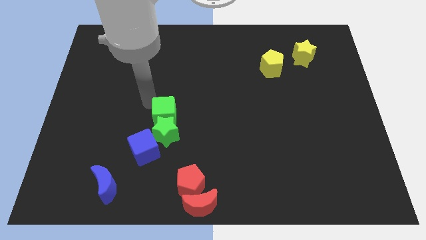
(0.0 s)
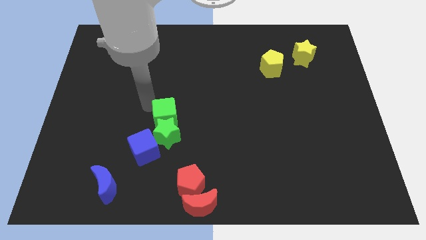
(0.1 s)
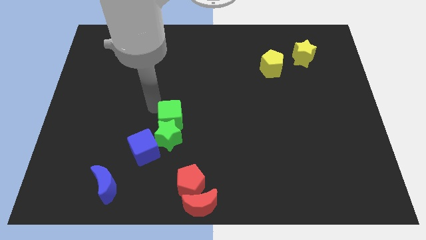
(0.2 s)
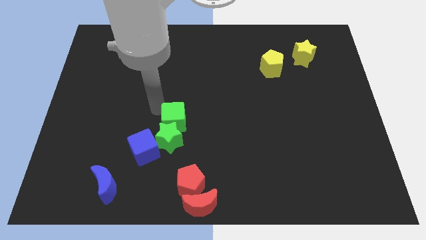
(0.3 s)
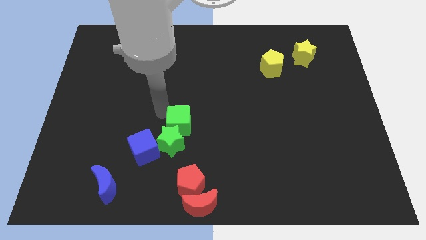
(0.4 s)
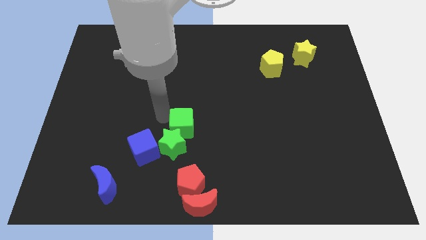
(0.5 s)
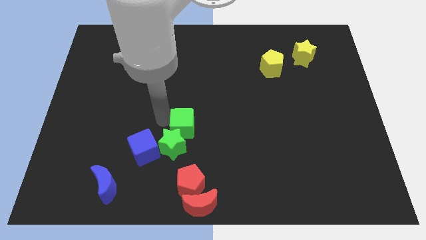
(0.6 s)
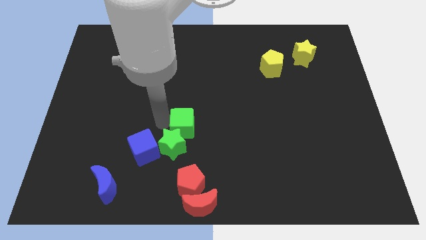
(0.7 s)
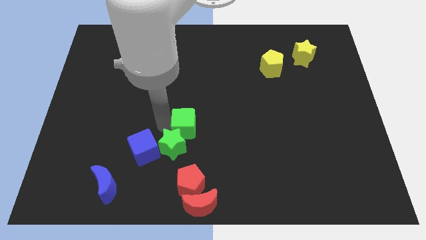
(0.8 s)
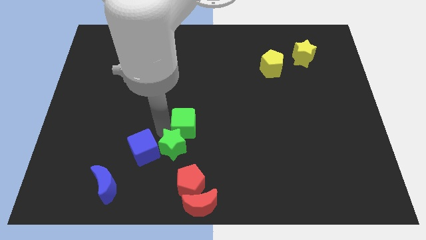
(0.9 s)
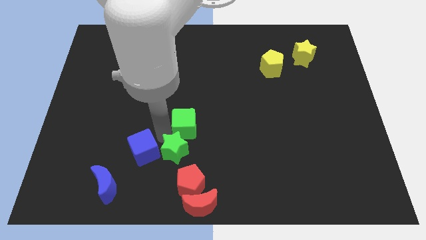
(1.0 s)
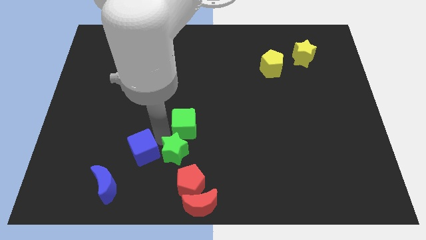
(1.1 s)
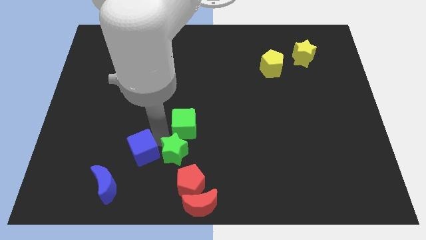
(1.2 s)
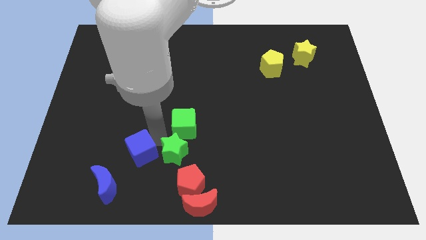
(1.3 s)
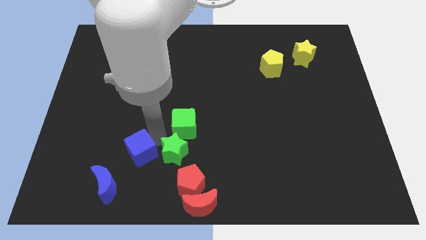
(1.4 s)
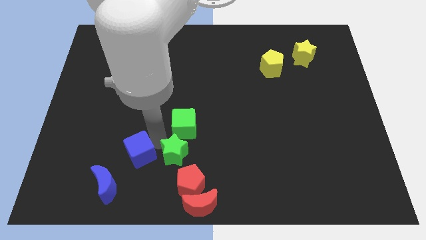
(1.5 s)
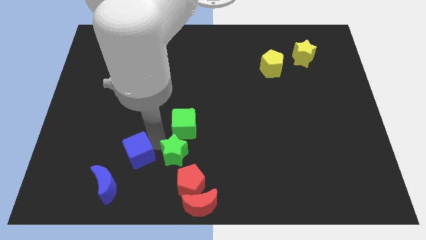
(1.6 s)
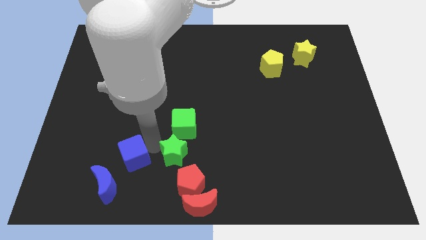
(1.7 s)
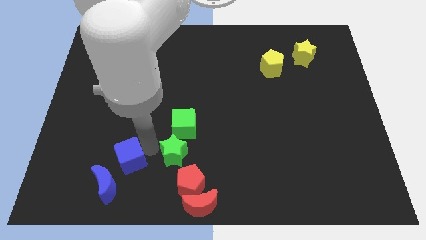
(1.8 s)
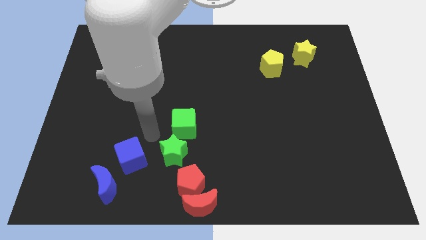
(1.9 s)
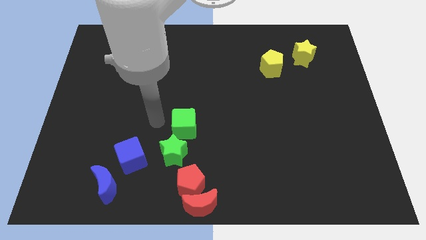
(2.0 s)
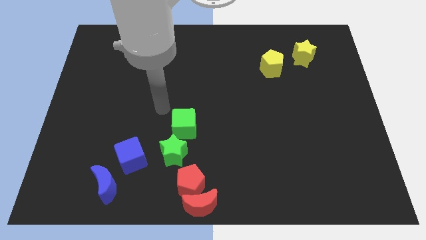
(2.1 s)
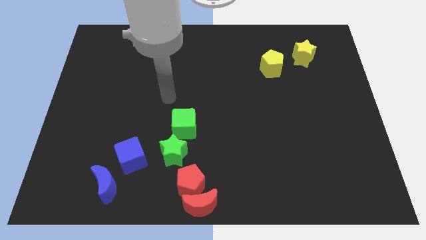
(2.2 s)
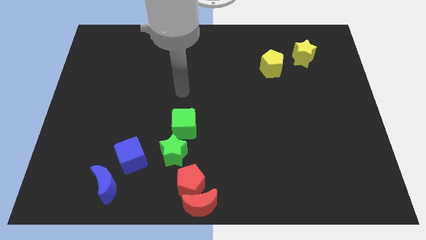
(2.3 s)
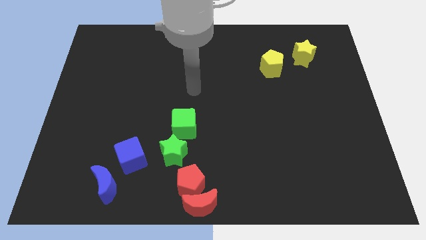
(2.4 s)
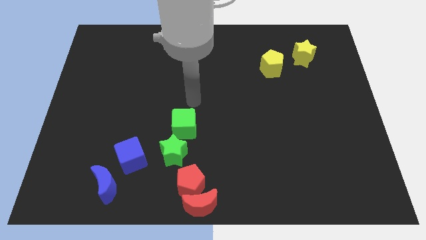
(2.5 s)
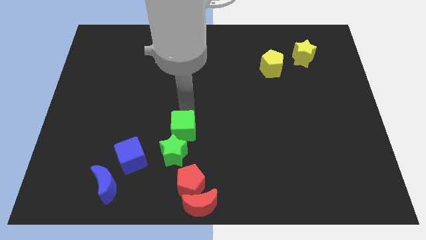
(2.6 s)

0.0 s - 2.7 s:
push the green star and green cube towards the red pentagon

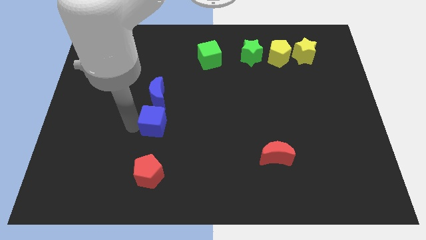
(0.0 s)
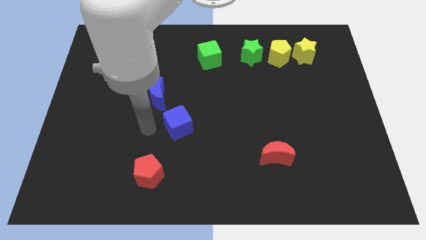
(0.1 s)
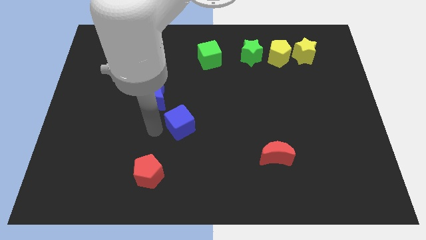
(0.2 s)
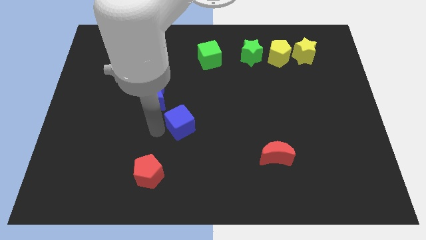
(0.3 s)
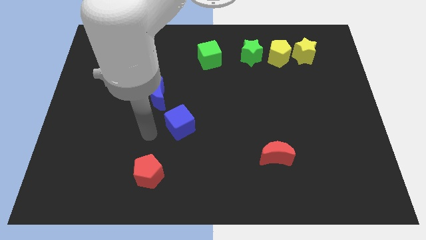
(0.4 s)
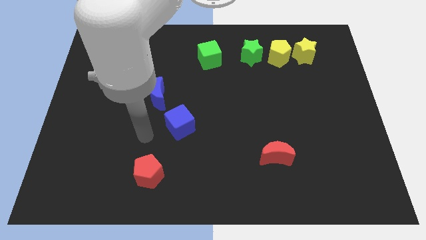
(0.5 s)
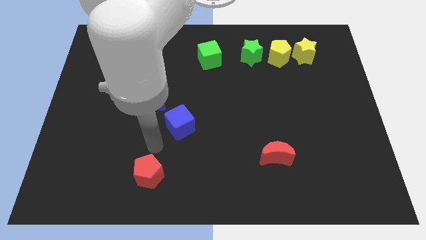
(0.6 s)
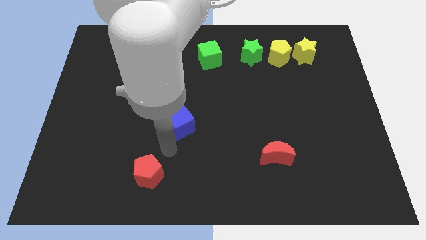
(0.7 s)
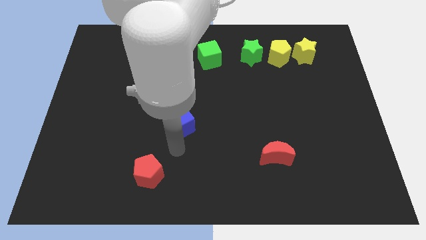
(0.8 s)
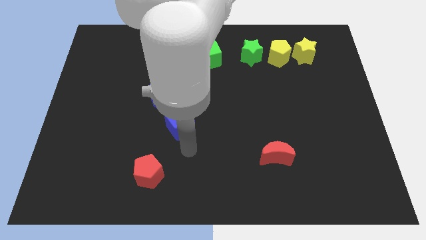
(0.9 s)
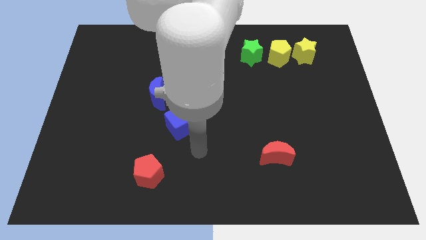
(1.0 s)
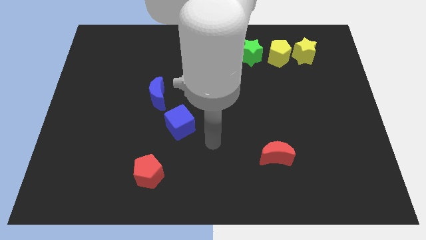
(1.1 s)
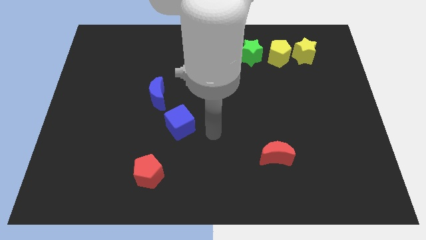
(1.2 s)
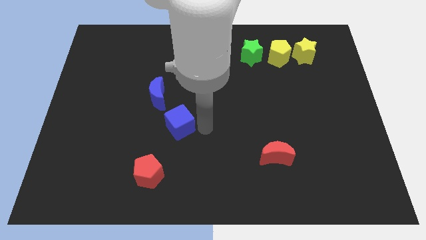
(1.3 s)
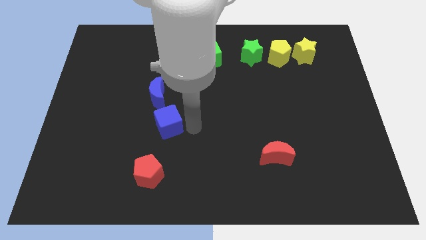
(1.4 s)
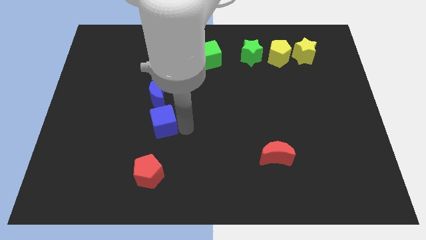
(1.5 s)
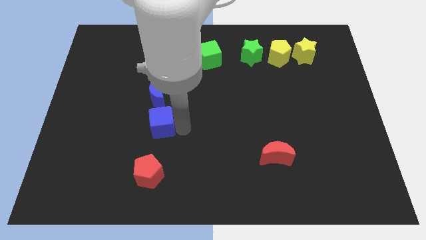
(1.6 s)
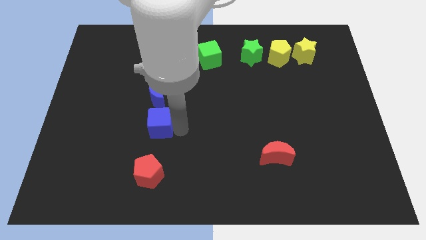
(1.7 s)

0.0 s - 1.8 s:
move blue cube below blue moon

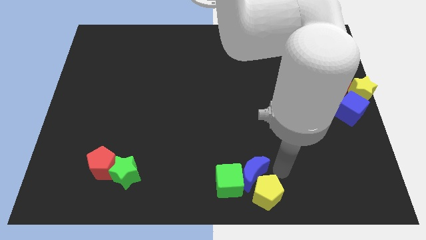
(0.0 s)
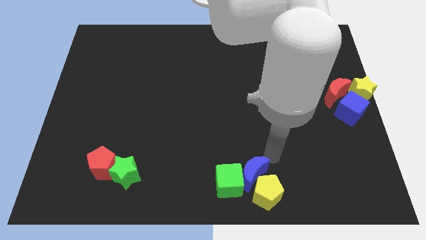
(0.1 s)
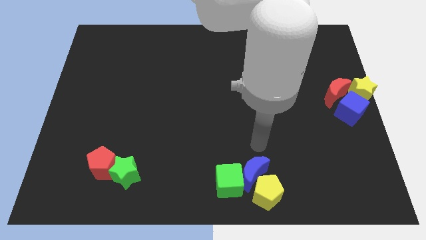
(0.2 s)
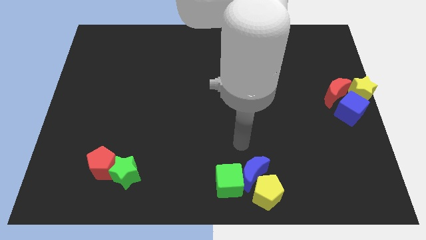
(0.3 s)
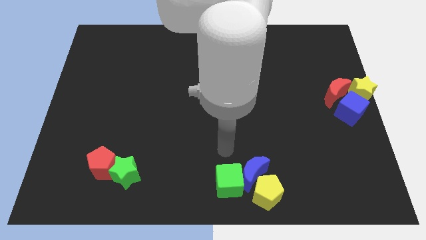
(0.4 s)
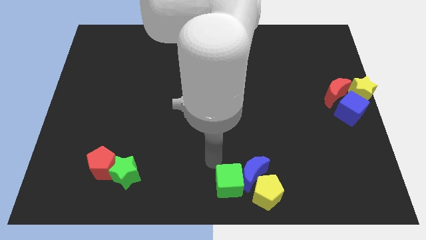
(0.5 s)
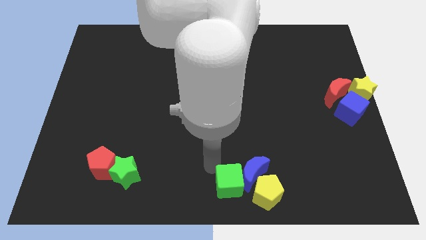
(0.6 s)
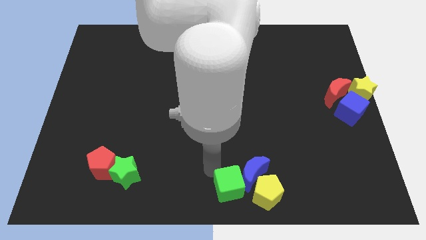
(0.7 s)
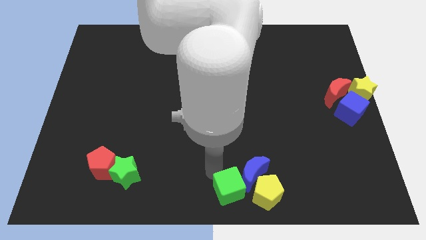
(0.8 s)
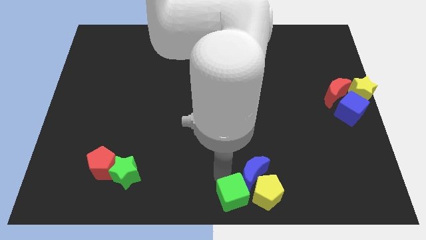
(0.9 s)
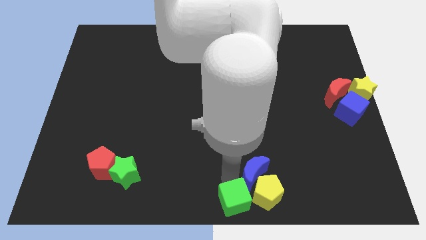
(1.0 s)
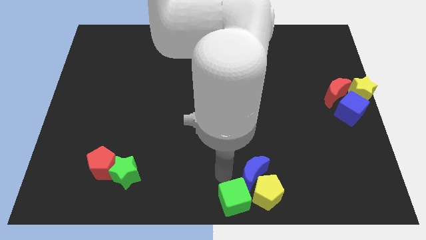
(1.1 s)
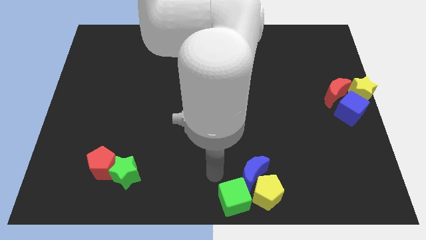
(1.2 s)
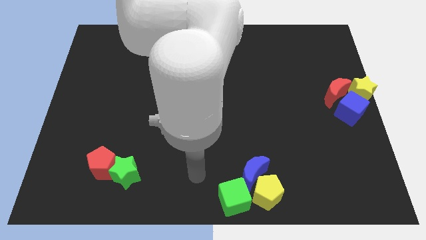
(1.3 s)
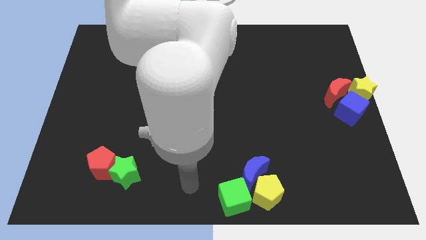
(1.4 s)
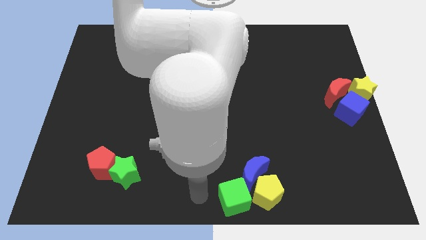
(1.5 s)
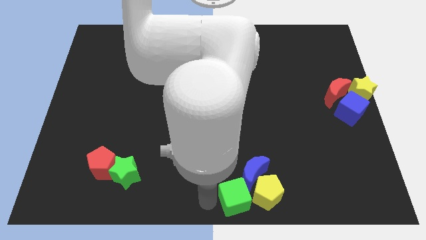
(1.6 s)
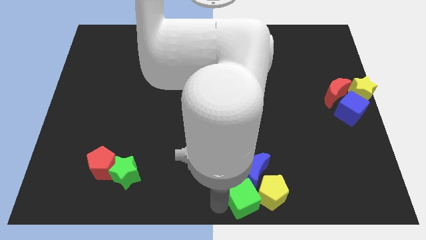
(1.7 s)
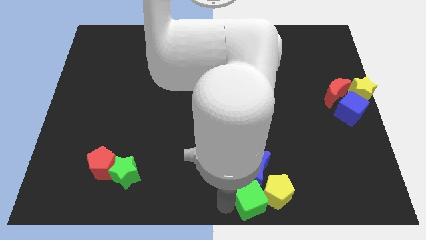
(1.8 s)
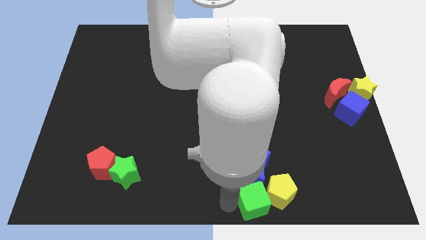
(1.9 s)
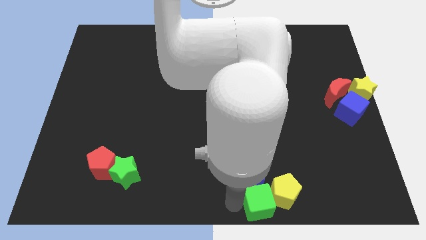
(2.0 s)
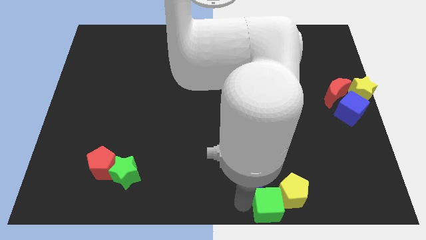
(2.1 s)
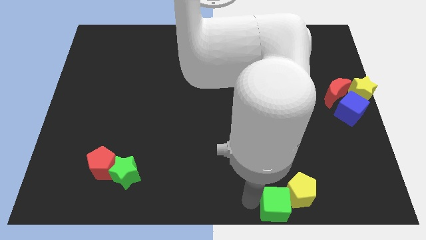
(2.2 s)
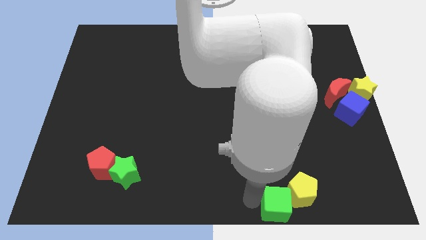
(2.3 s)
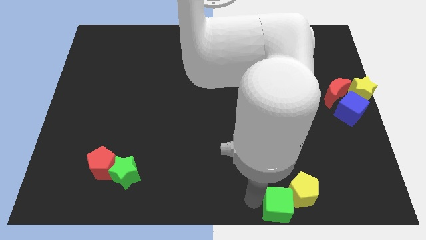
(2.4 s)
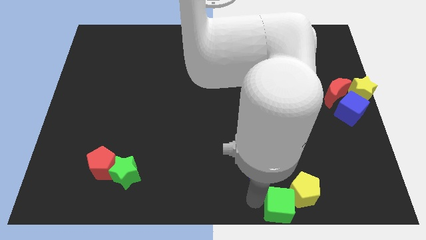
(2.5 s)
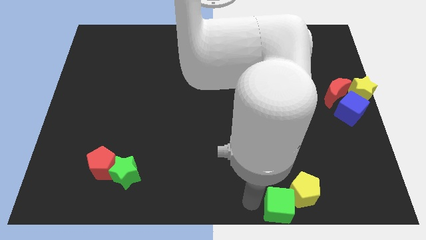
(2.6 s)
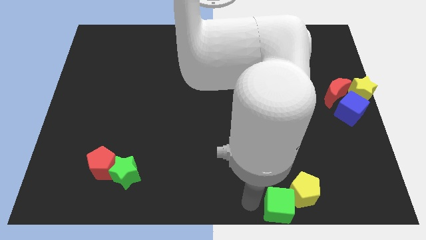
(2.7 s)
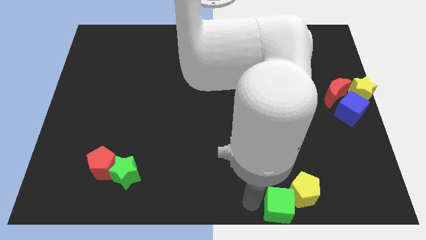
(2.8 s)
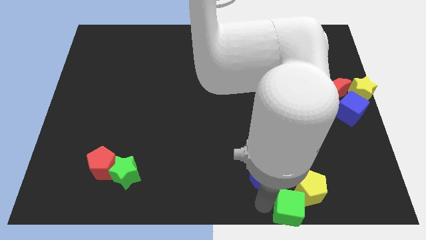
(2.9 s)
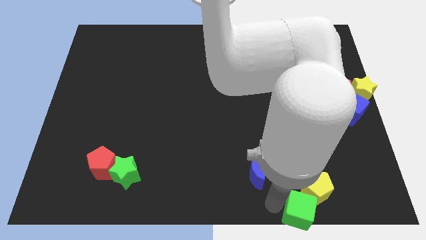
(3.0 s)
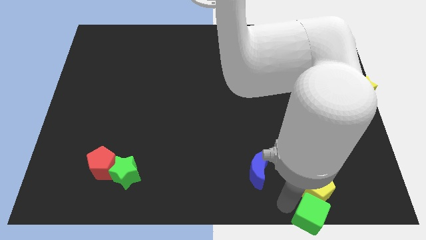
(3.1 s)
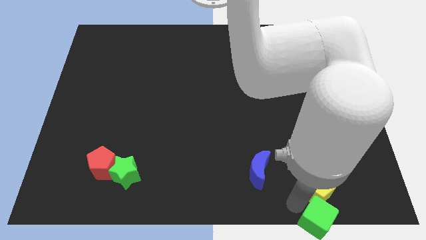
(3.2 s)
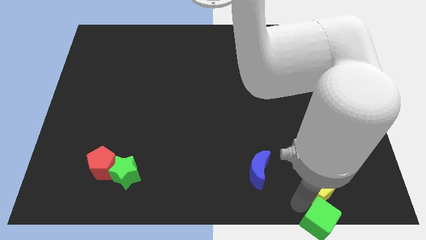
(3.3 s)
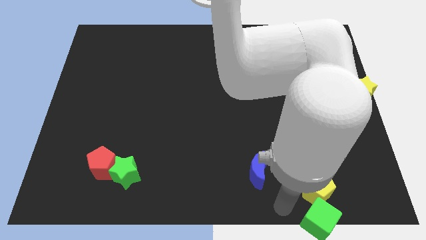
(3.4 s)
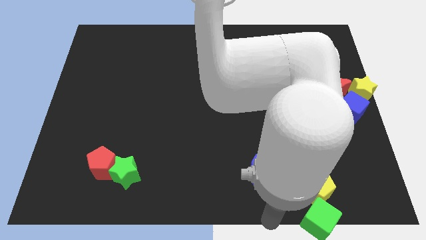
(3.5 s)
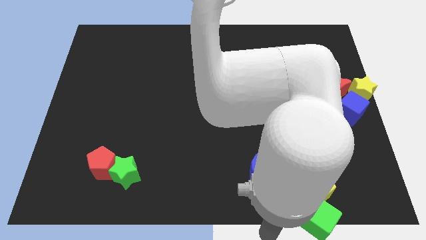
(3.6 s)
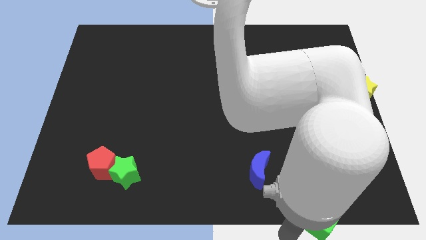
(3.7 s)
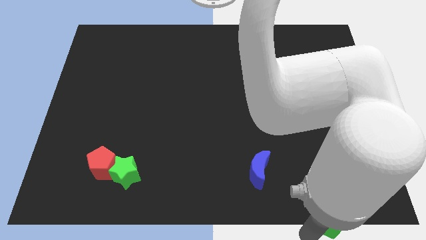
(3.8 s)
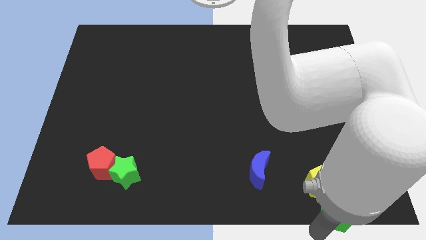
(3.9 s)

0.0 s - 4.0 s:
move the green cube towards the bottom right

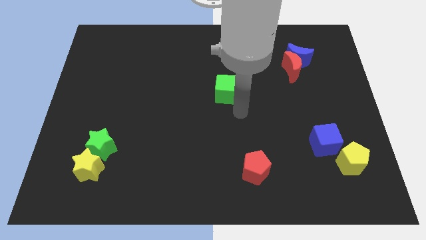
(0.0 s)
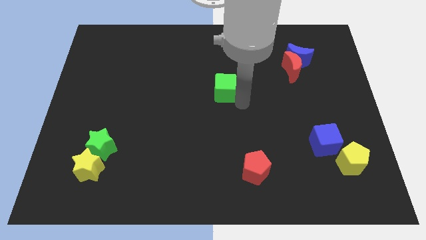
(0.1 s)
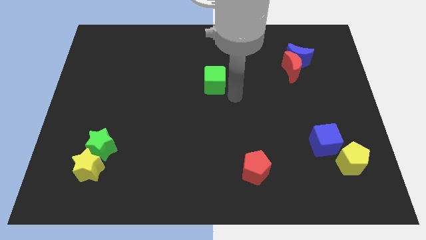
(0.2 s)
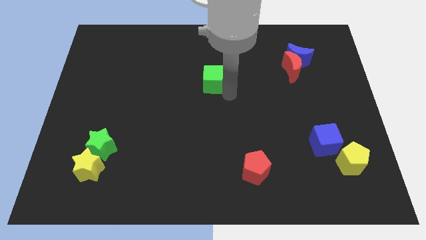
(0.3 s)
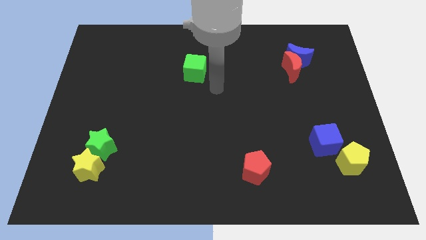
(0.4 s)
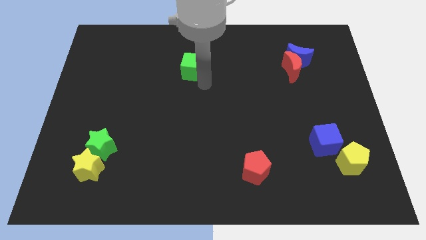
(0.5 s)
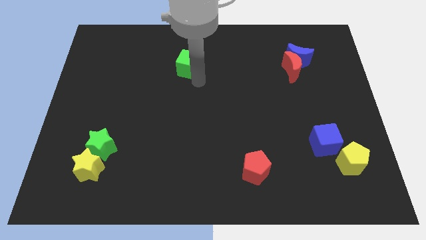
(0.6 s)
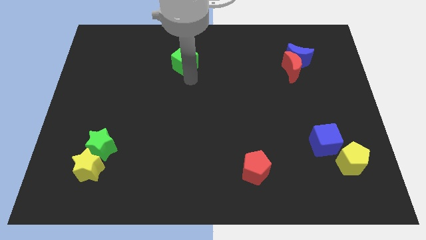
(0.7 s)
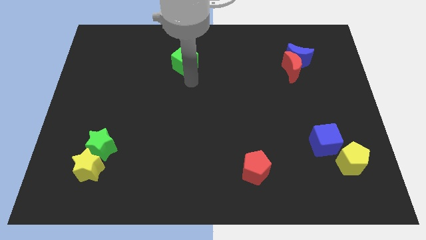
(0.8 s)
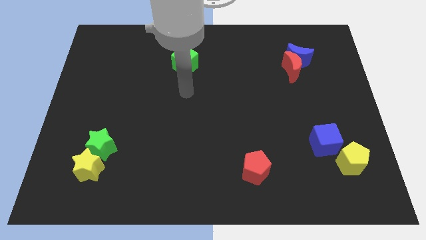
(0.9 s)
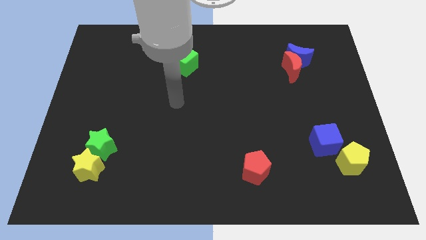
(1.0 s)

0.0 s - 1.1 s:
push green cube towards the top of the board
